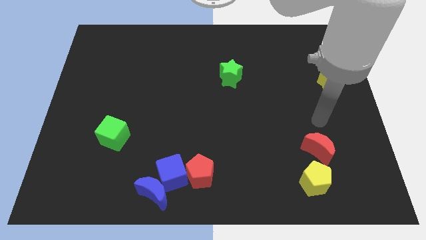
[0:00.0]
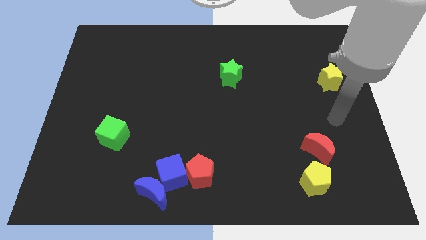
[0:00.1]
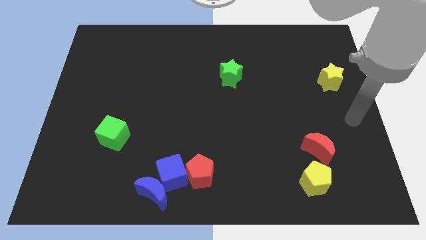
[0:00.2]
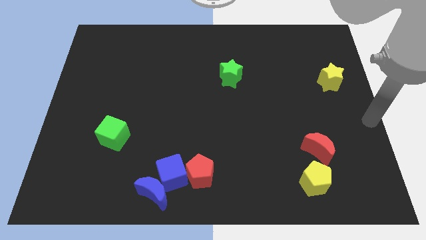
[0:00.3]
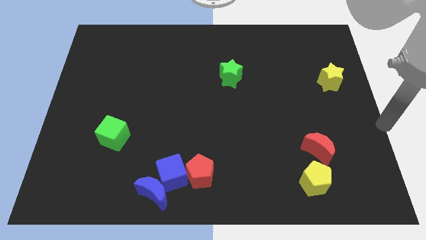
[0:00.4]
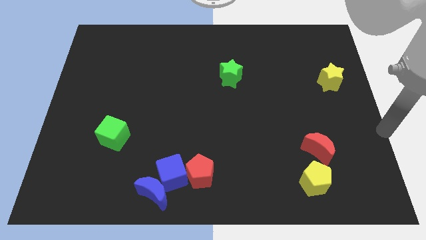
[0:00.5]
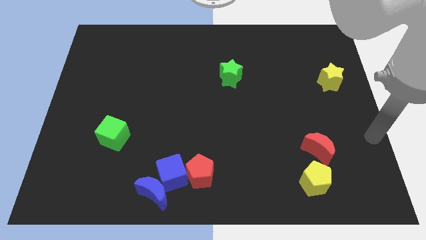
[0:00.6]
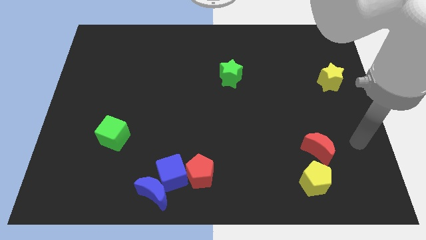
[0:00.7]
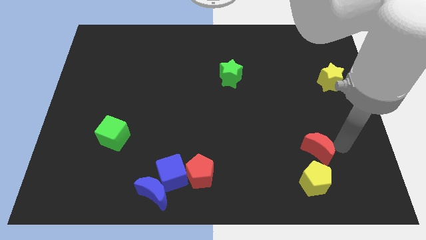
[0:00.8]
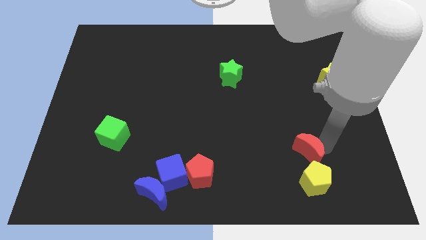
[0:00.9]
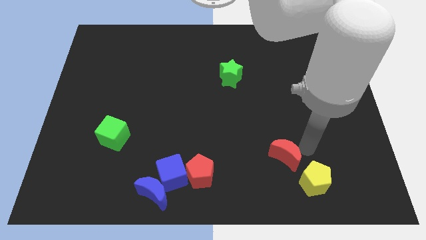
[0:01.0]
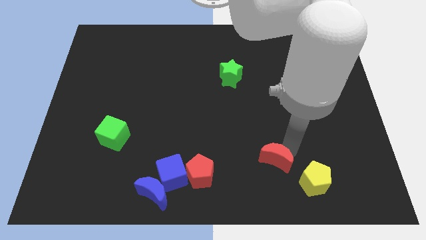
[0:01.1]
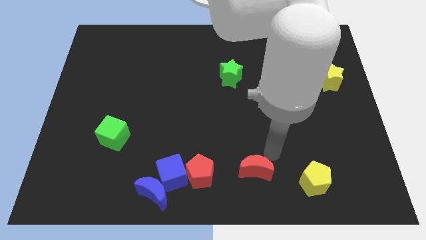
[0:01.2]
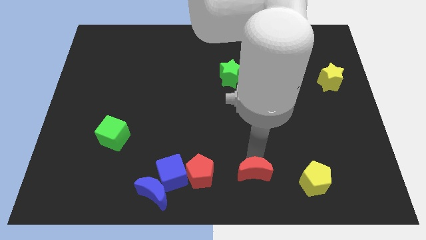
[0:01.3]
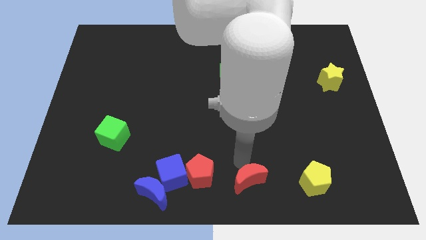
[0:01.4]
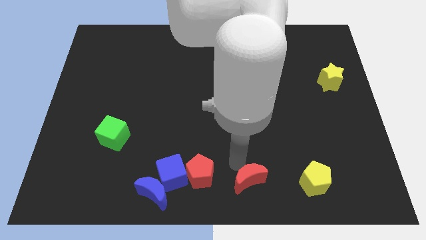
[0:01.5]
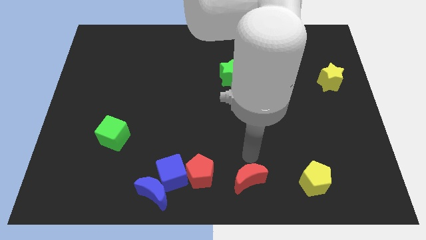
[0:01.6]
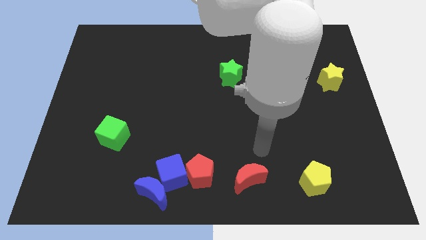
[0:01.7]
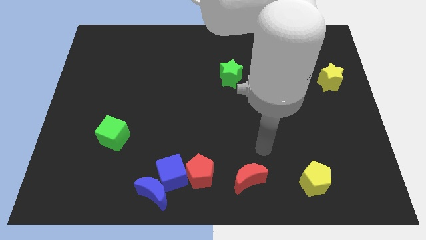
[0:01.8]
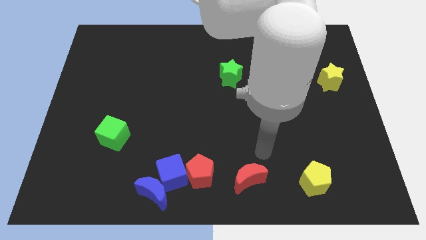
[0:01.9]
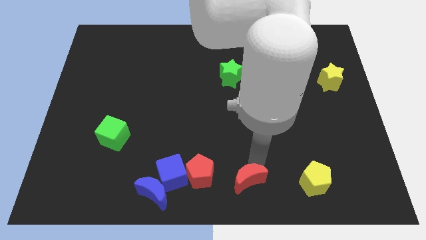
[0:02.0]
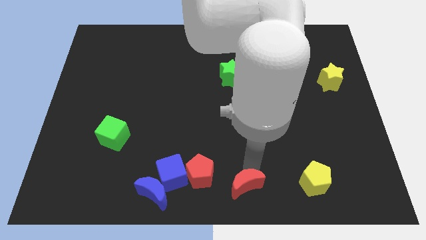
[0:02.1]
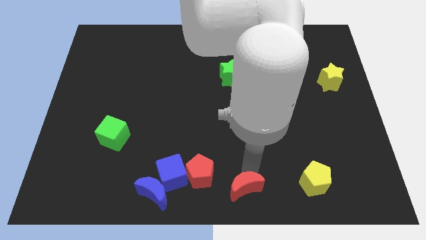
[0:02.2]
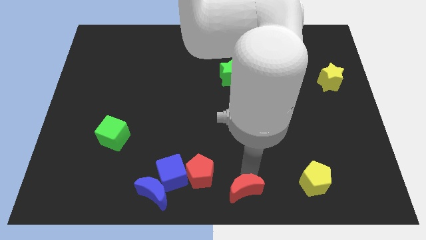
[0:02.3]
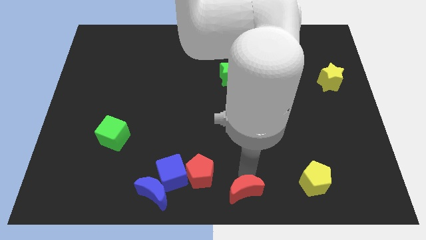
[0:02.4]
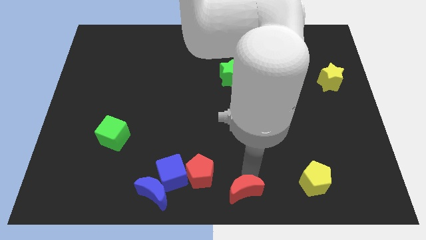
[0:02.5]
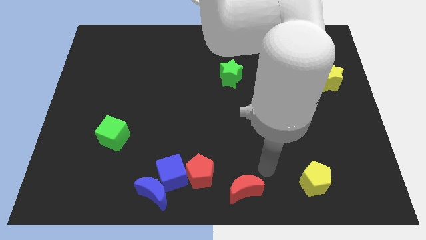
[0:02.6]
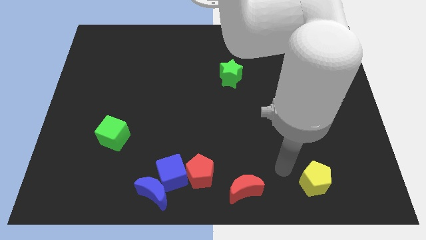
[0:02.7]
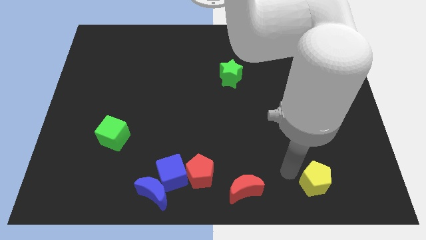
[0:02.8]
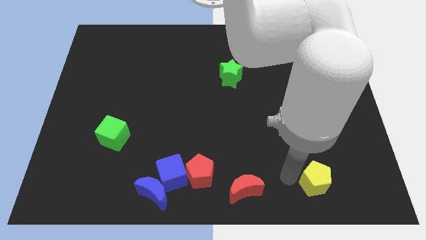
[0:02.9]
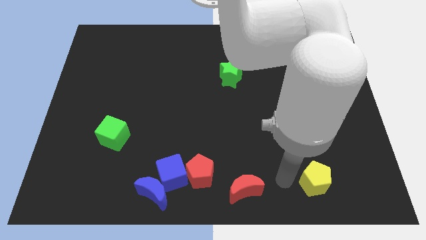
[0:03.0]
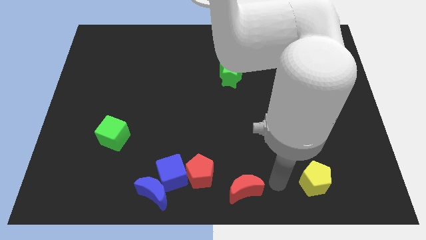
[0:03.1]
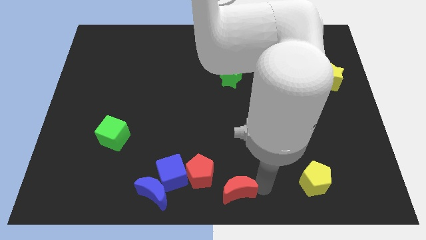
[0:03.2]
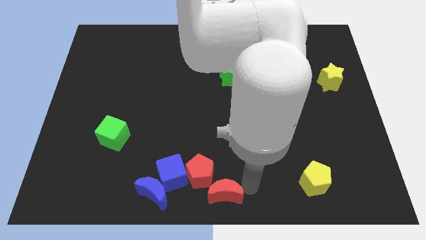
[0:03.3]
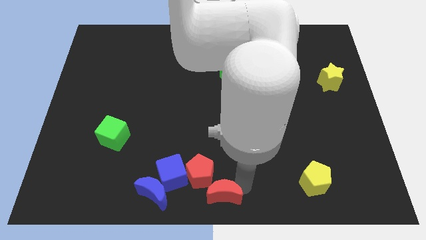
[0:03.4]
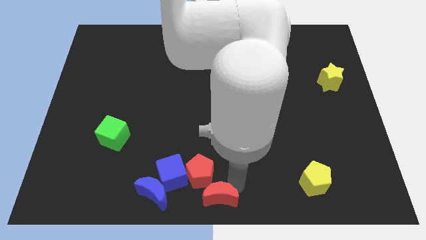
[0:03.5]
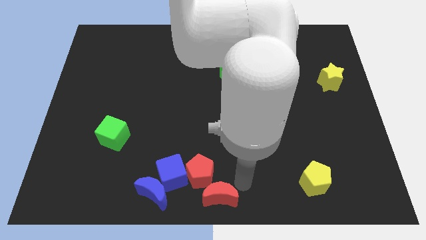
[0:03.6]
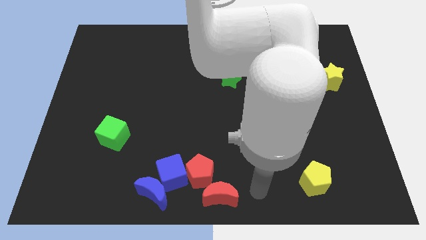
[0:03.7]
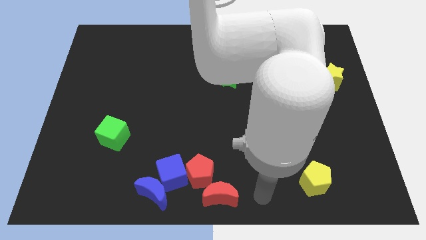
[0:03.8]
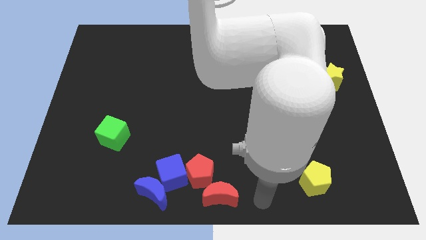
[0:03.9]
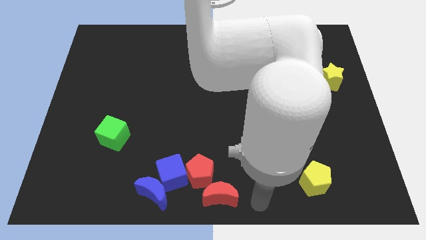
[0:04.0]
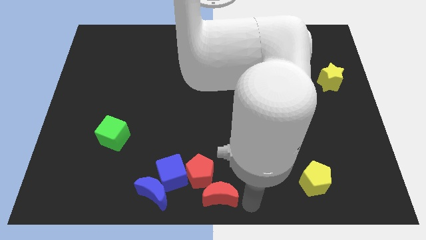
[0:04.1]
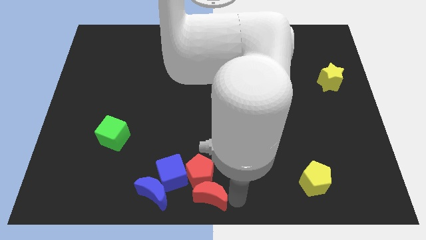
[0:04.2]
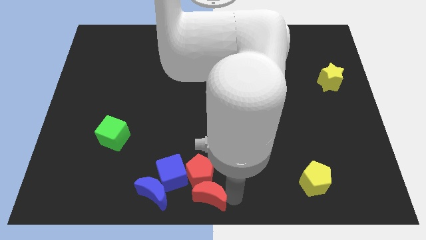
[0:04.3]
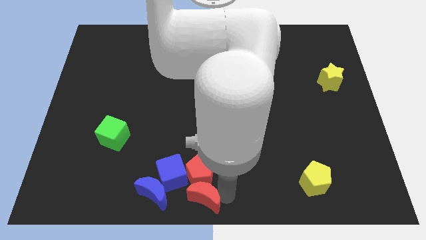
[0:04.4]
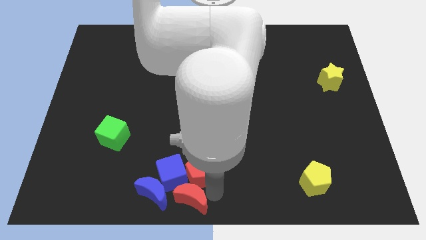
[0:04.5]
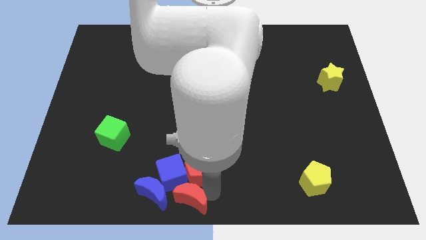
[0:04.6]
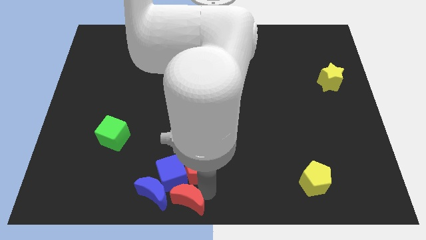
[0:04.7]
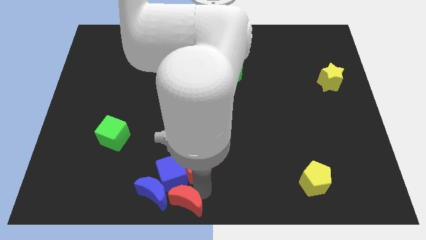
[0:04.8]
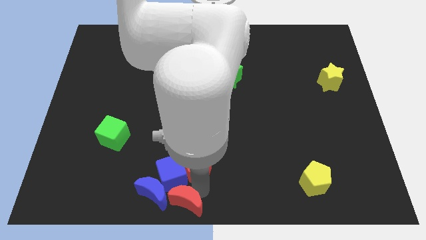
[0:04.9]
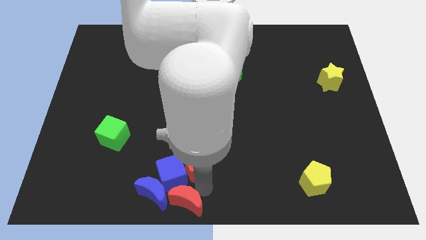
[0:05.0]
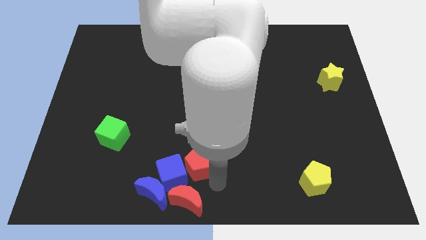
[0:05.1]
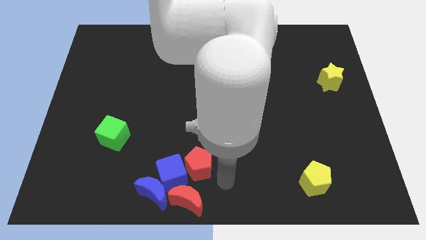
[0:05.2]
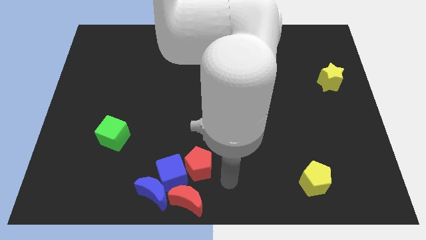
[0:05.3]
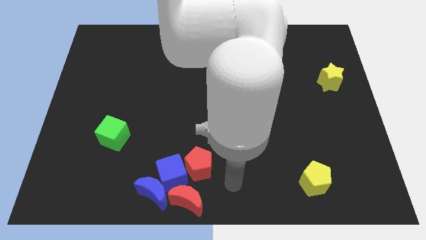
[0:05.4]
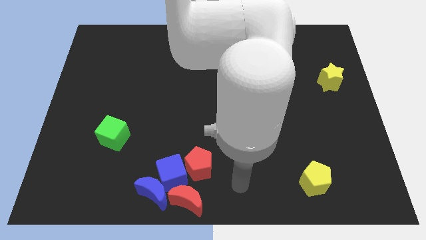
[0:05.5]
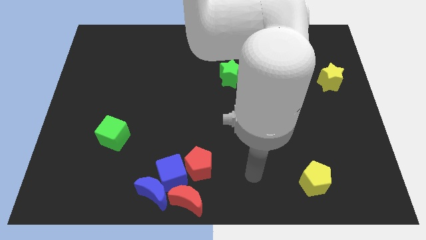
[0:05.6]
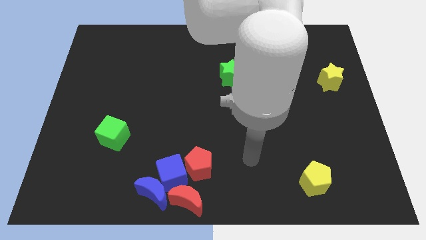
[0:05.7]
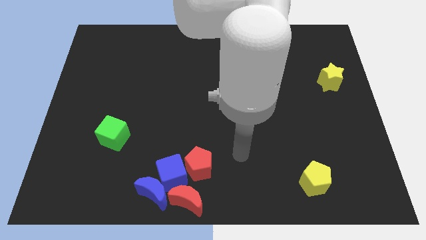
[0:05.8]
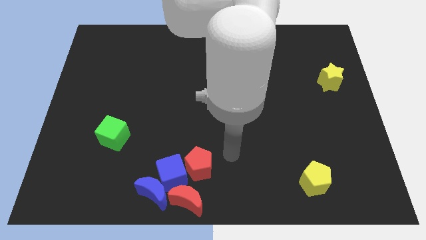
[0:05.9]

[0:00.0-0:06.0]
place red crescent near blue crescent

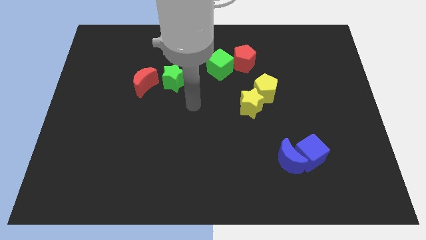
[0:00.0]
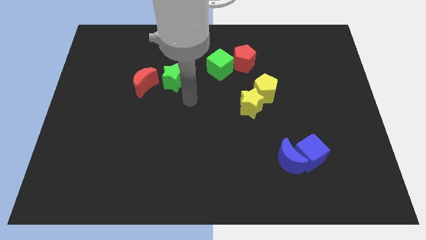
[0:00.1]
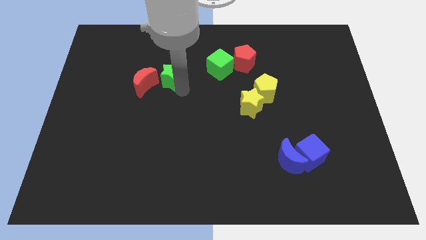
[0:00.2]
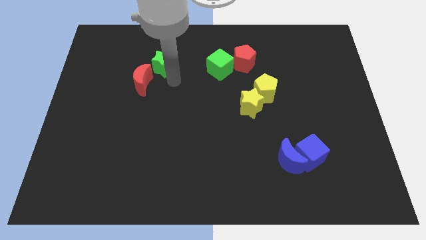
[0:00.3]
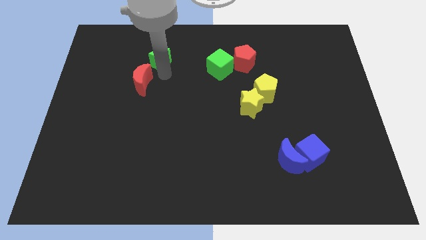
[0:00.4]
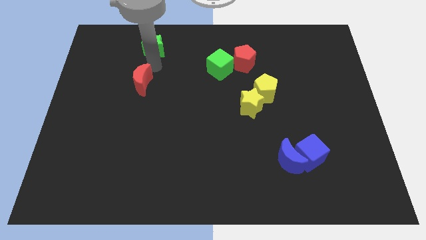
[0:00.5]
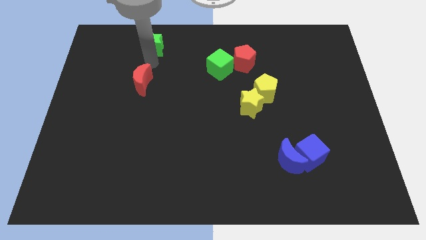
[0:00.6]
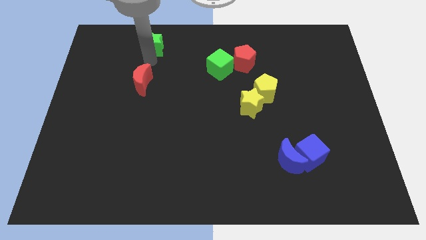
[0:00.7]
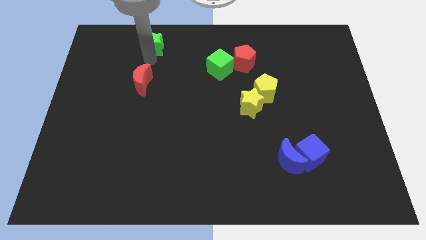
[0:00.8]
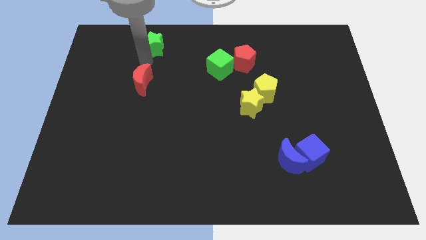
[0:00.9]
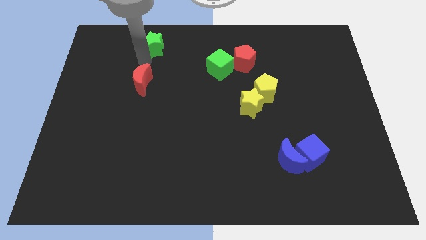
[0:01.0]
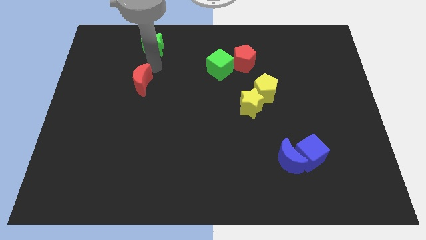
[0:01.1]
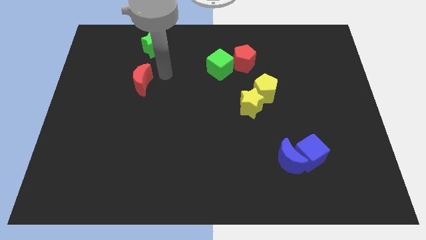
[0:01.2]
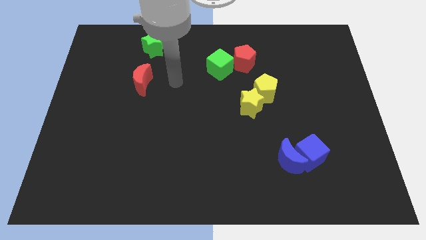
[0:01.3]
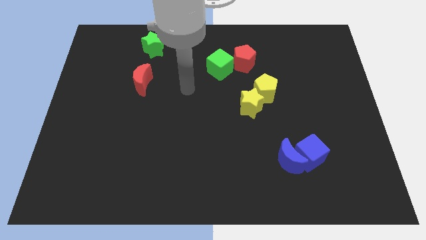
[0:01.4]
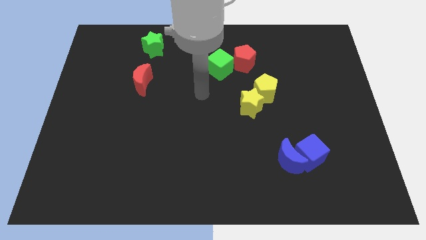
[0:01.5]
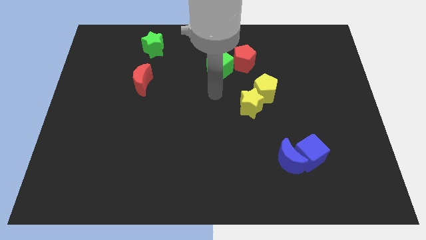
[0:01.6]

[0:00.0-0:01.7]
push the green star to the top of red moon

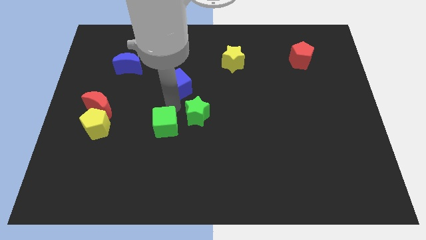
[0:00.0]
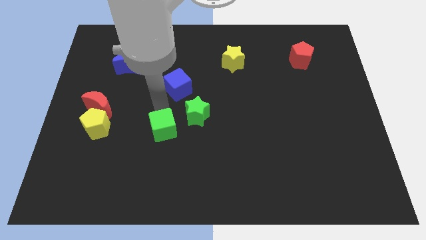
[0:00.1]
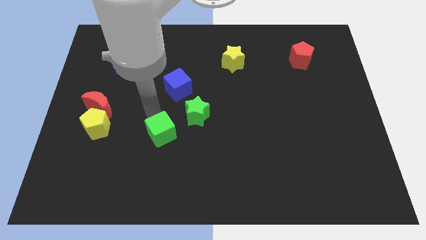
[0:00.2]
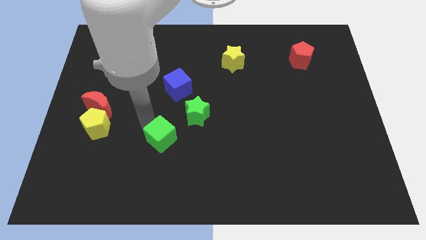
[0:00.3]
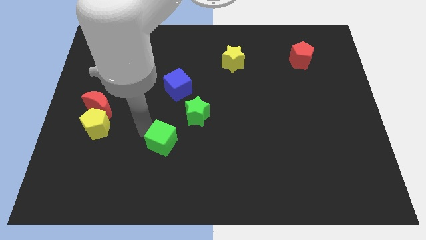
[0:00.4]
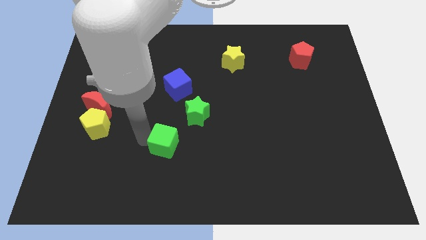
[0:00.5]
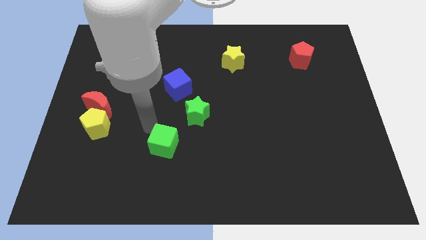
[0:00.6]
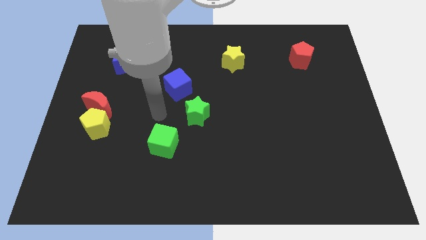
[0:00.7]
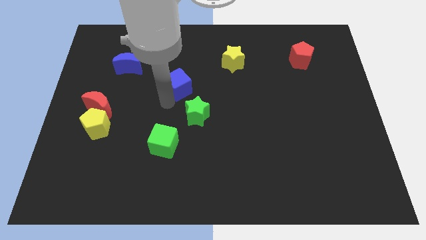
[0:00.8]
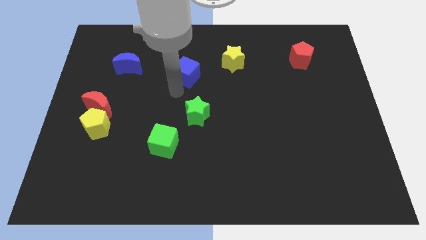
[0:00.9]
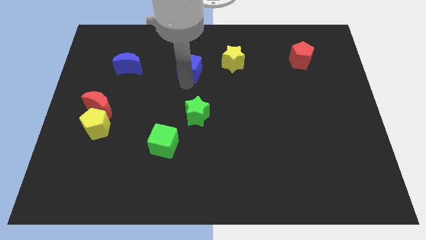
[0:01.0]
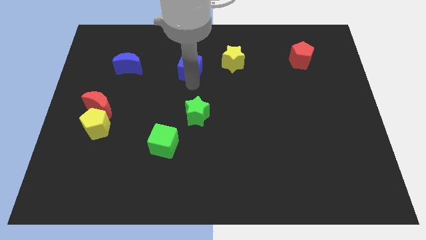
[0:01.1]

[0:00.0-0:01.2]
move the cubes in opposite directions

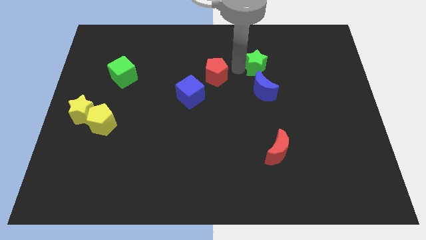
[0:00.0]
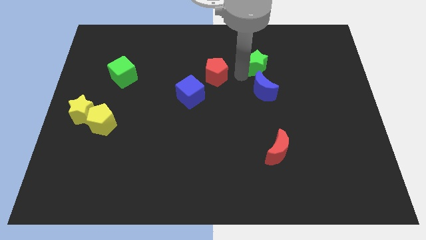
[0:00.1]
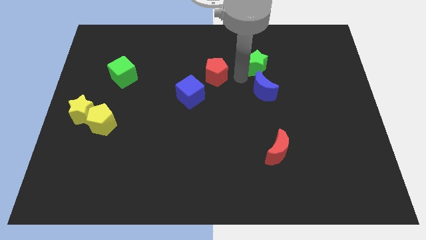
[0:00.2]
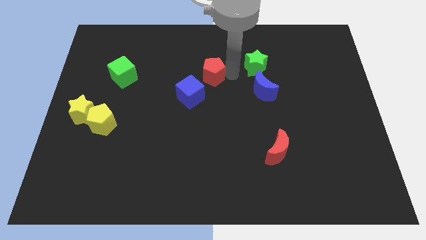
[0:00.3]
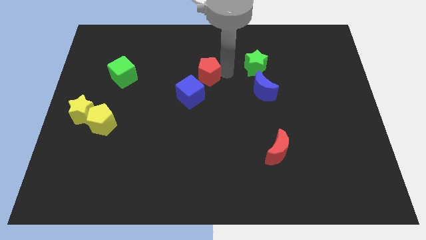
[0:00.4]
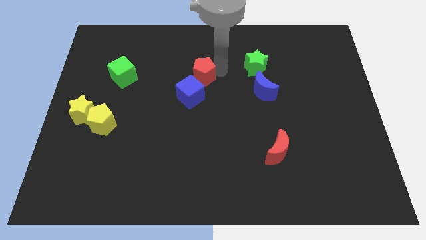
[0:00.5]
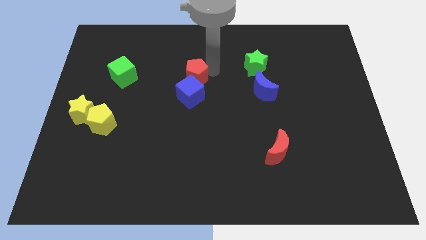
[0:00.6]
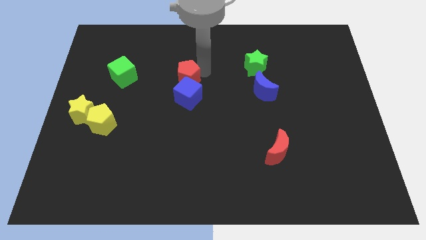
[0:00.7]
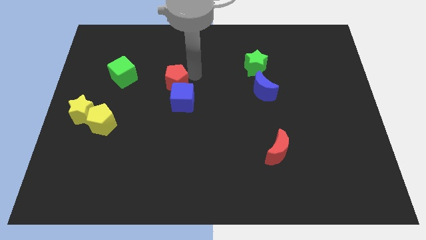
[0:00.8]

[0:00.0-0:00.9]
push red pentagon above blue cube
